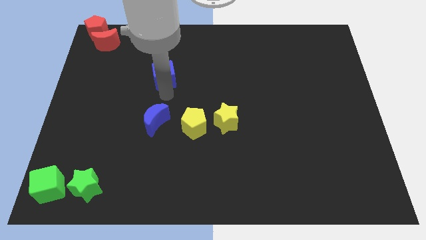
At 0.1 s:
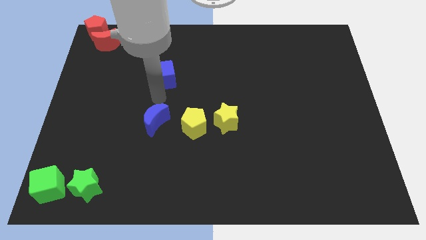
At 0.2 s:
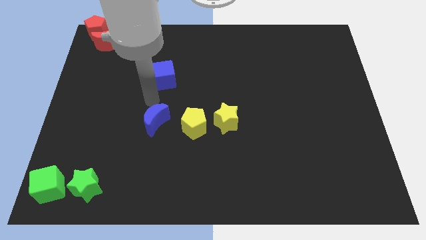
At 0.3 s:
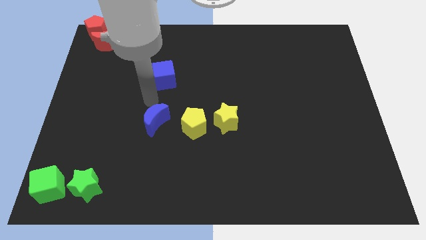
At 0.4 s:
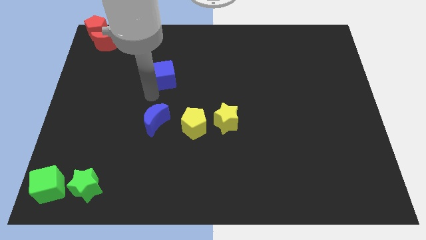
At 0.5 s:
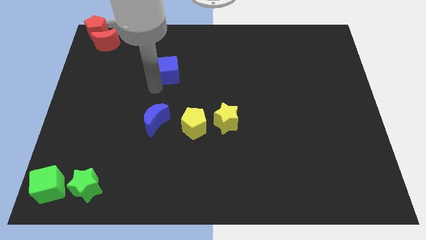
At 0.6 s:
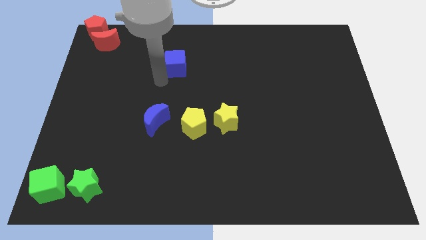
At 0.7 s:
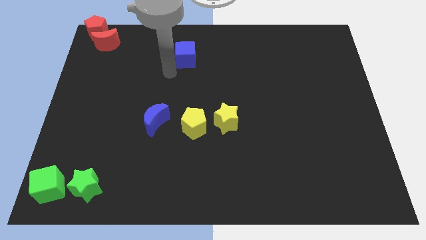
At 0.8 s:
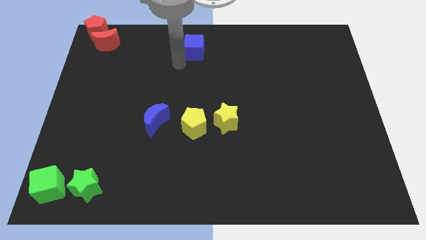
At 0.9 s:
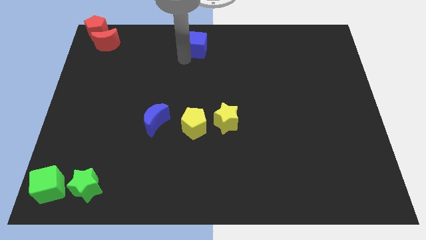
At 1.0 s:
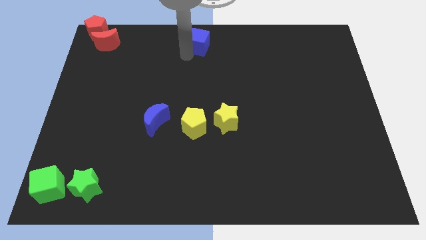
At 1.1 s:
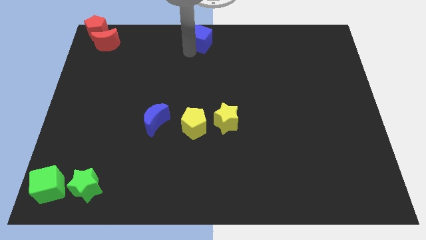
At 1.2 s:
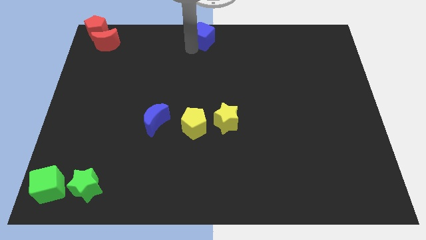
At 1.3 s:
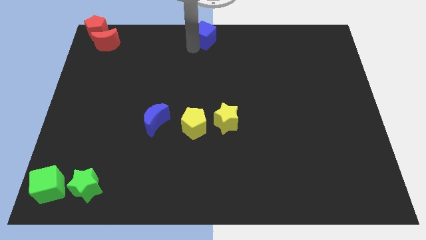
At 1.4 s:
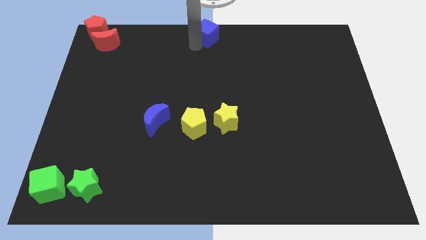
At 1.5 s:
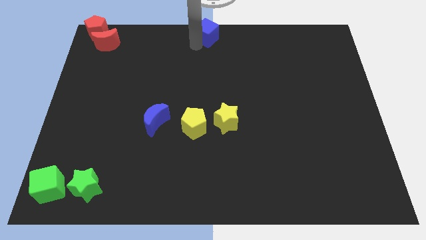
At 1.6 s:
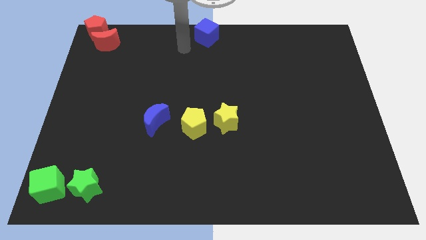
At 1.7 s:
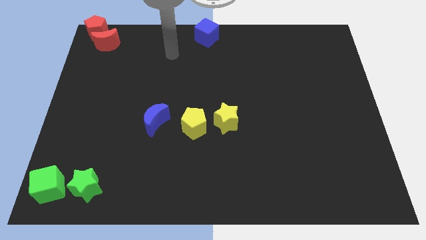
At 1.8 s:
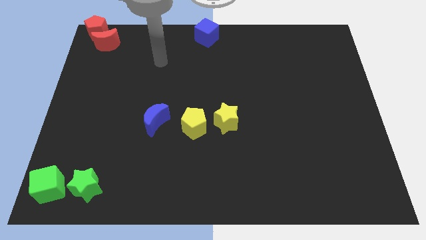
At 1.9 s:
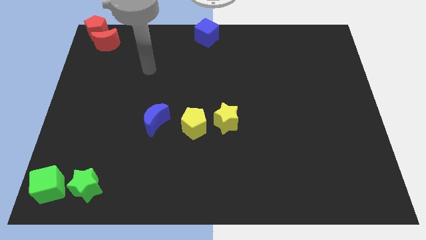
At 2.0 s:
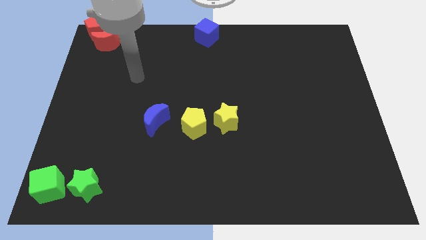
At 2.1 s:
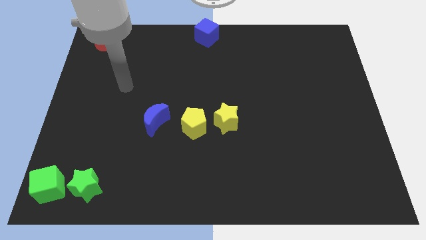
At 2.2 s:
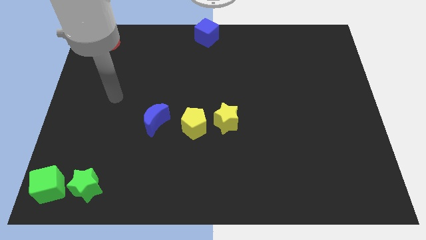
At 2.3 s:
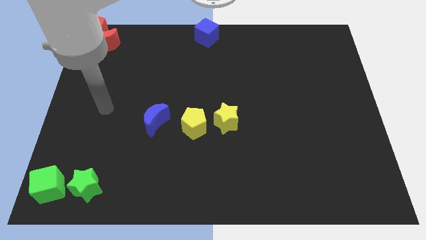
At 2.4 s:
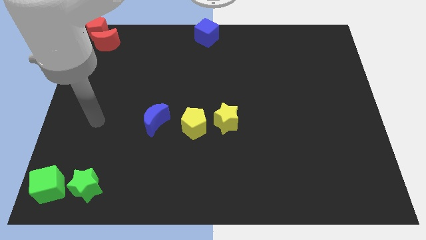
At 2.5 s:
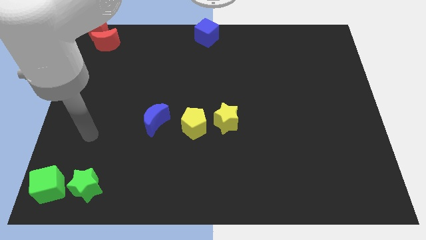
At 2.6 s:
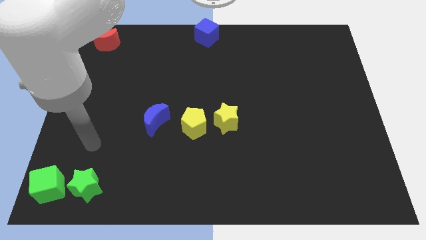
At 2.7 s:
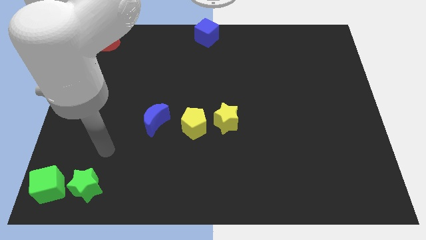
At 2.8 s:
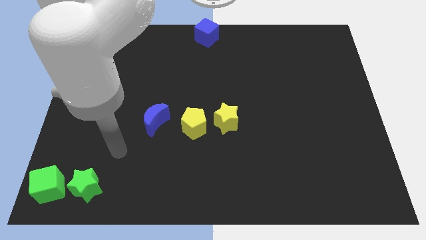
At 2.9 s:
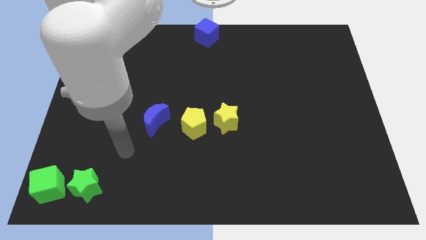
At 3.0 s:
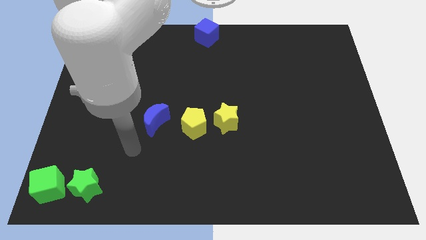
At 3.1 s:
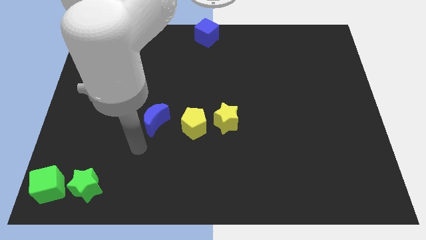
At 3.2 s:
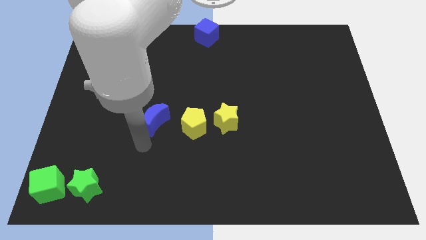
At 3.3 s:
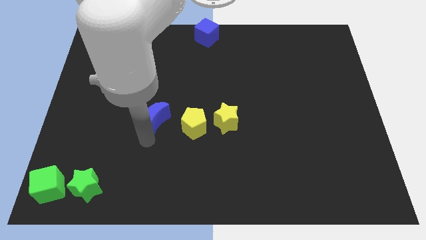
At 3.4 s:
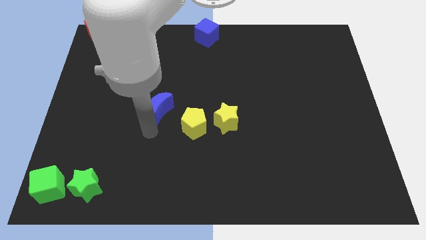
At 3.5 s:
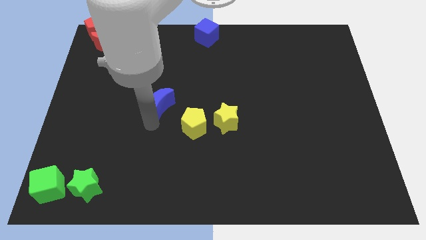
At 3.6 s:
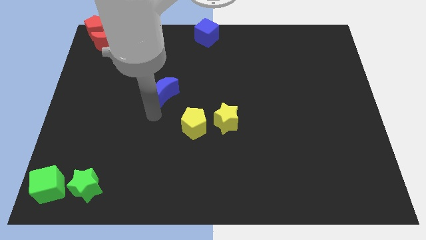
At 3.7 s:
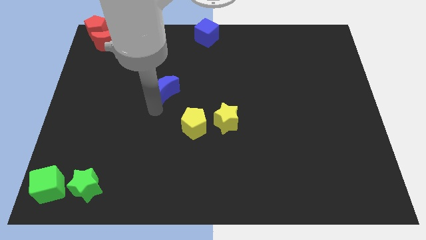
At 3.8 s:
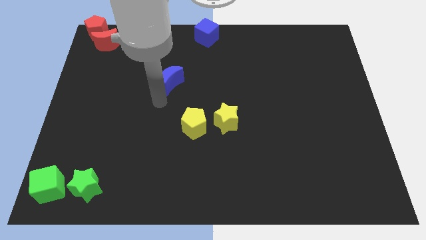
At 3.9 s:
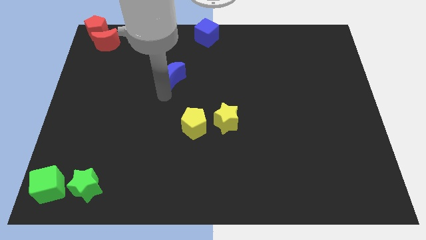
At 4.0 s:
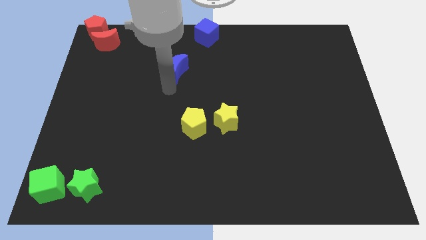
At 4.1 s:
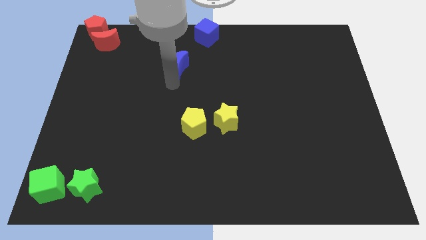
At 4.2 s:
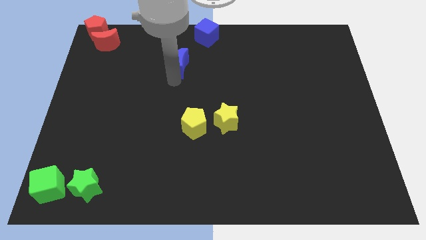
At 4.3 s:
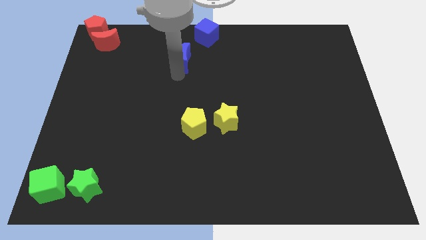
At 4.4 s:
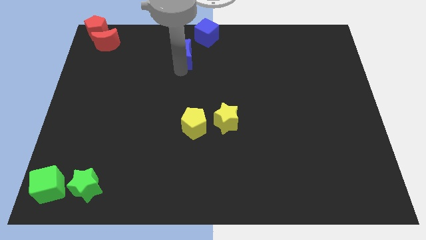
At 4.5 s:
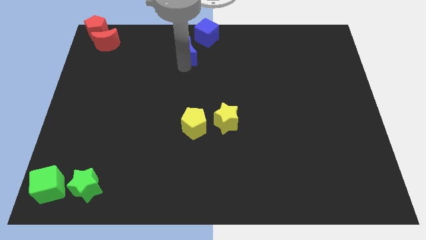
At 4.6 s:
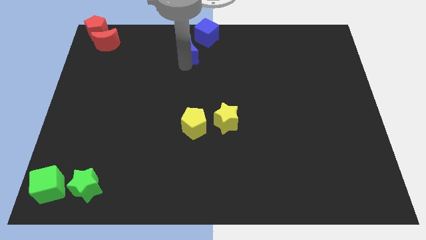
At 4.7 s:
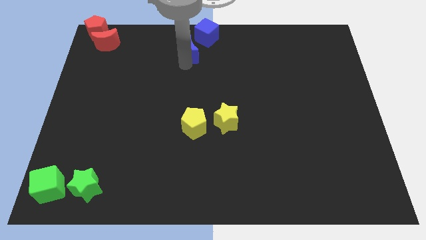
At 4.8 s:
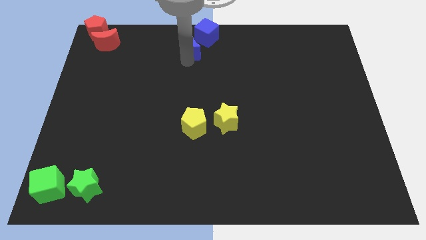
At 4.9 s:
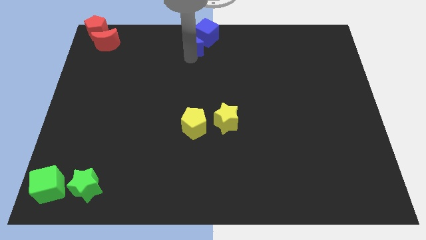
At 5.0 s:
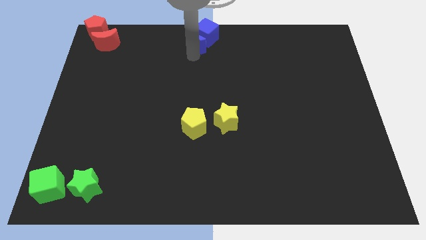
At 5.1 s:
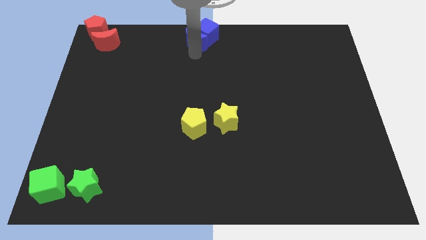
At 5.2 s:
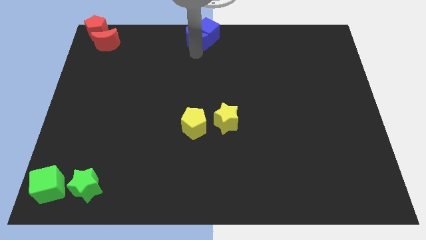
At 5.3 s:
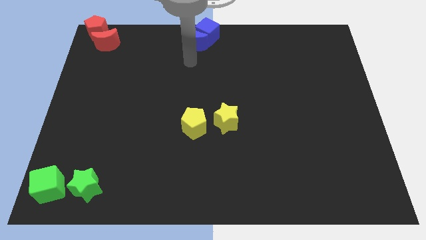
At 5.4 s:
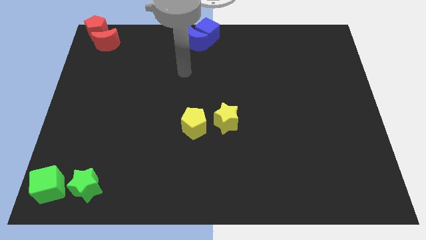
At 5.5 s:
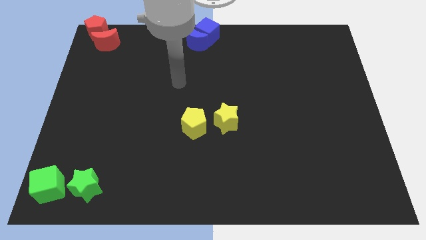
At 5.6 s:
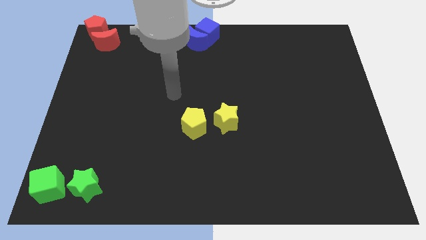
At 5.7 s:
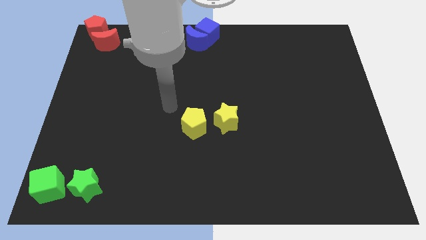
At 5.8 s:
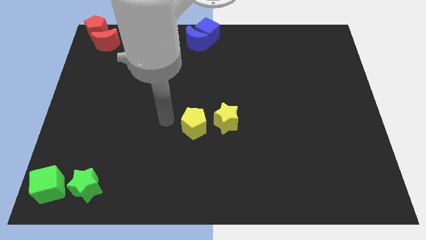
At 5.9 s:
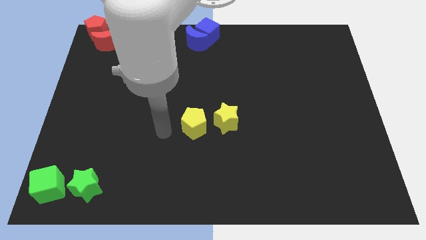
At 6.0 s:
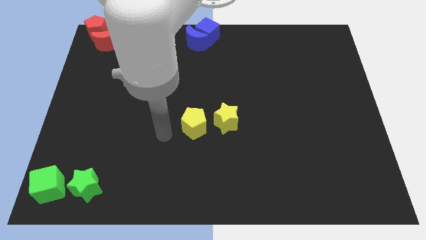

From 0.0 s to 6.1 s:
move the blue cubes to the top middle of the board

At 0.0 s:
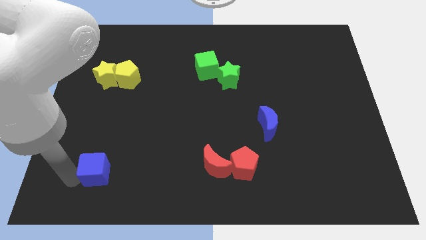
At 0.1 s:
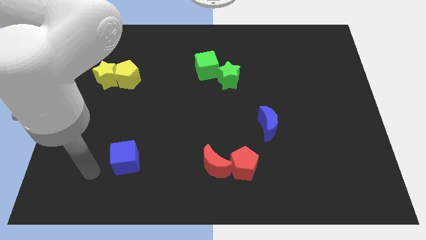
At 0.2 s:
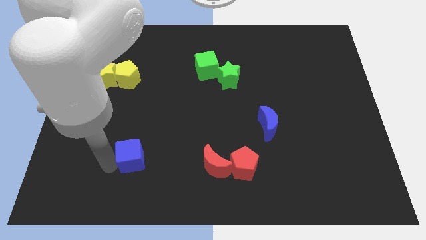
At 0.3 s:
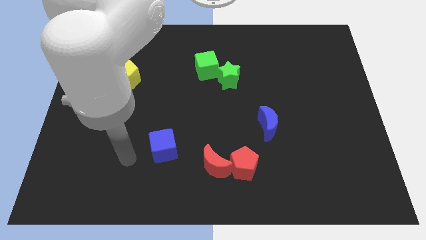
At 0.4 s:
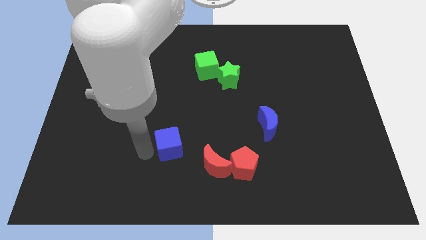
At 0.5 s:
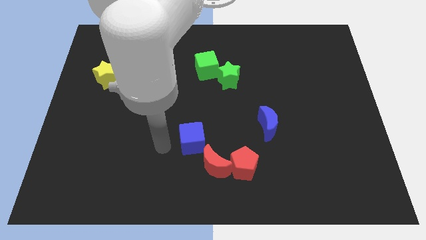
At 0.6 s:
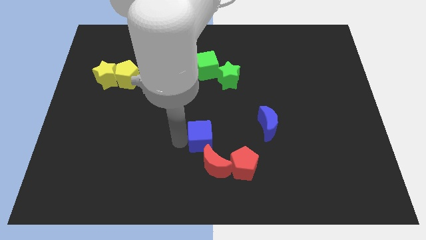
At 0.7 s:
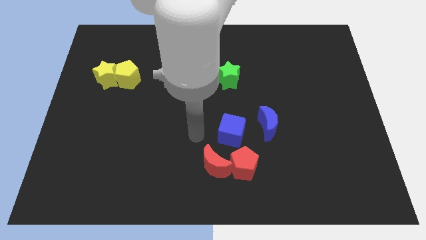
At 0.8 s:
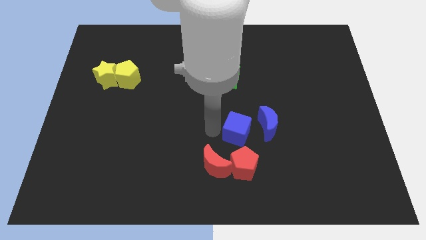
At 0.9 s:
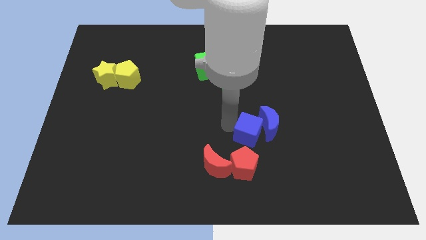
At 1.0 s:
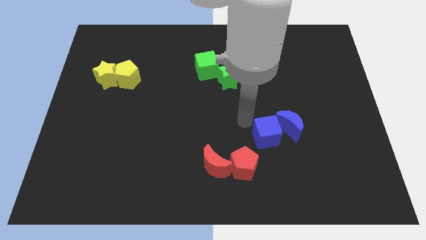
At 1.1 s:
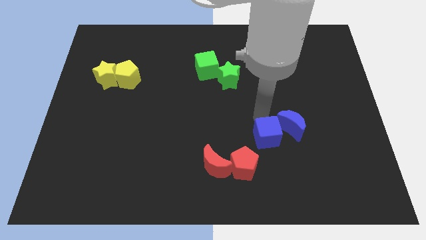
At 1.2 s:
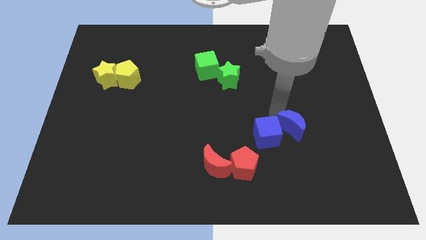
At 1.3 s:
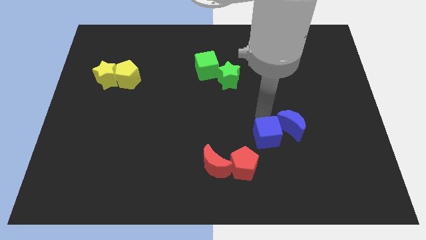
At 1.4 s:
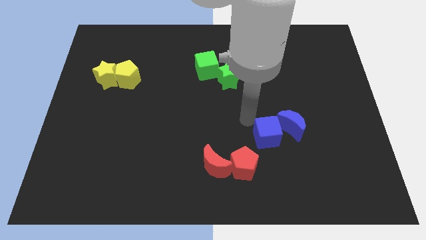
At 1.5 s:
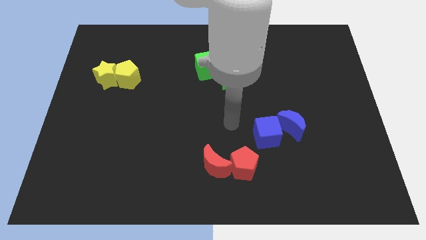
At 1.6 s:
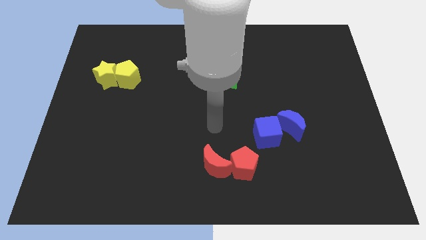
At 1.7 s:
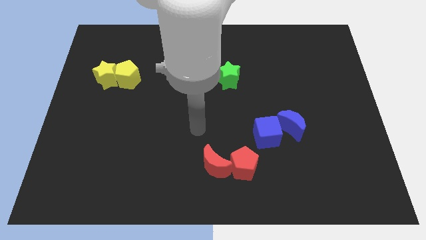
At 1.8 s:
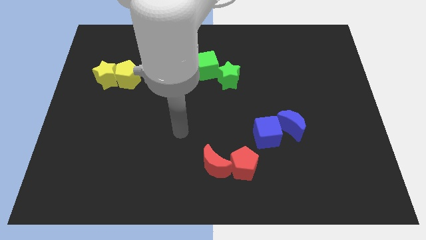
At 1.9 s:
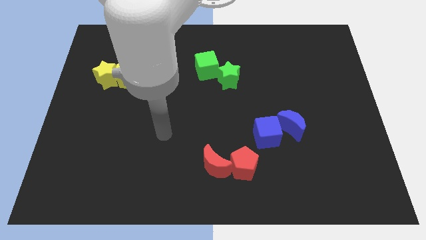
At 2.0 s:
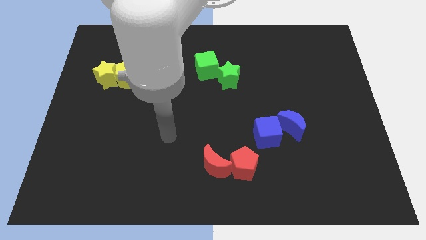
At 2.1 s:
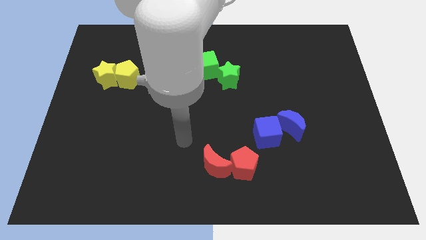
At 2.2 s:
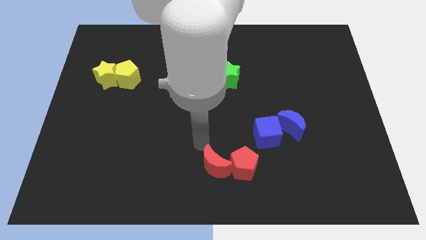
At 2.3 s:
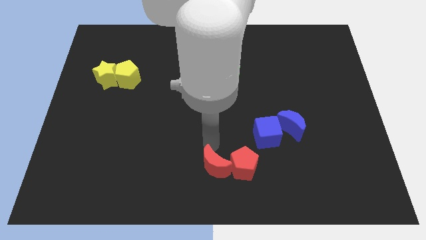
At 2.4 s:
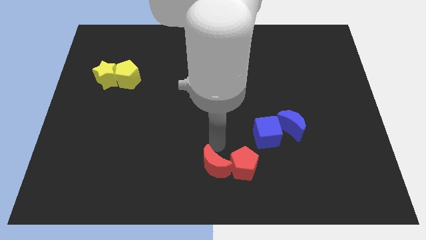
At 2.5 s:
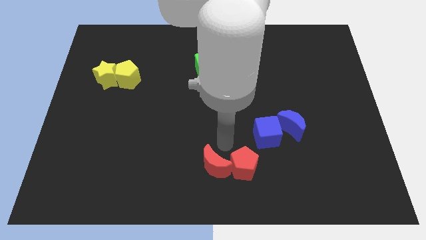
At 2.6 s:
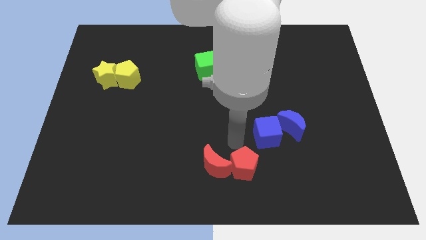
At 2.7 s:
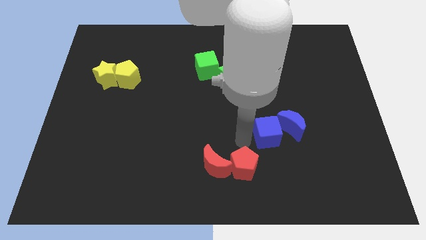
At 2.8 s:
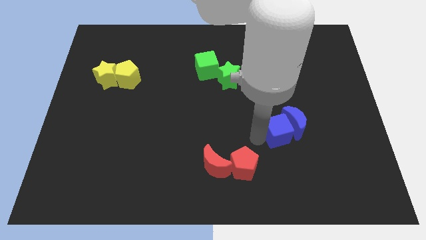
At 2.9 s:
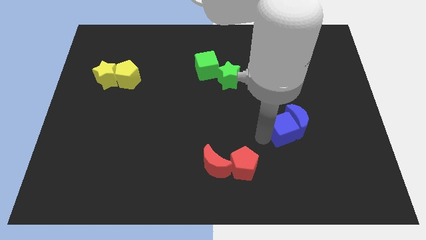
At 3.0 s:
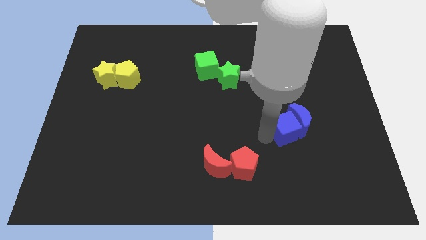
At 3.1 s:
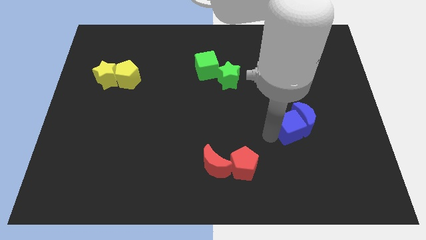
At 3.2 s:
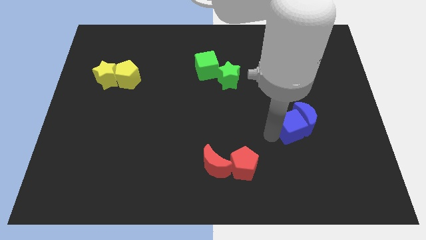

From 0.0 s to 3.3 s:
push the blue cube into the blue moon
